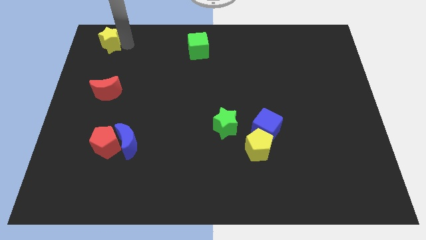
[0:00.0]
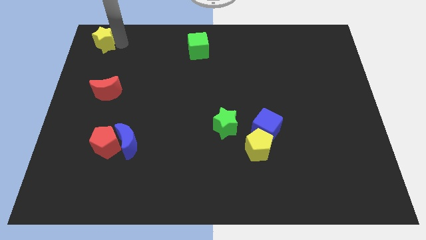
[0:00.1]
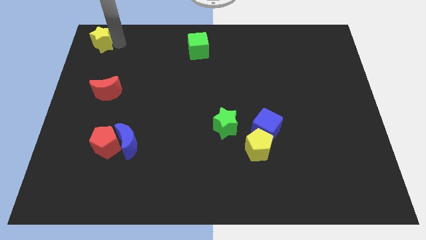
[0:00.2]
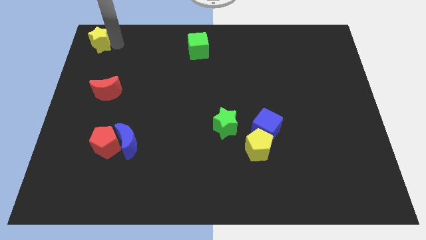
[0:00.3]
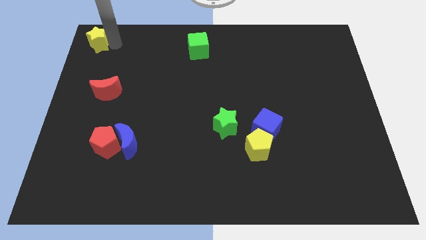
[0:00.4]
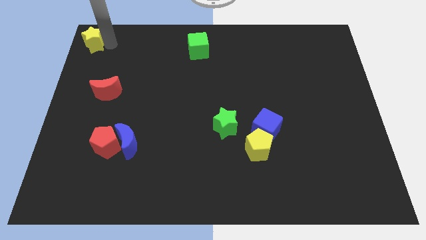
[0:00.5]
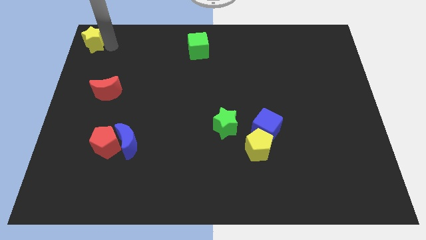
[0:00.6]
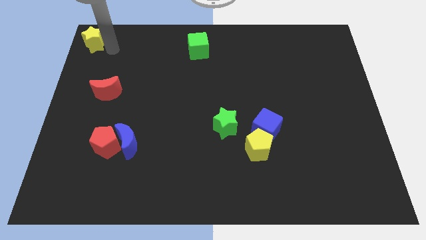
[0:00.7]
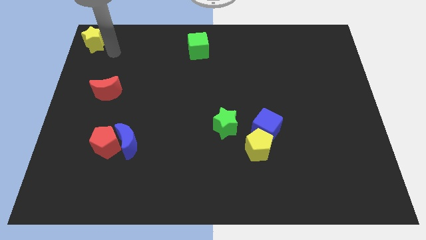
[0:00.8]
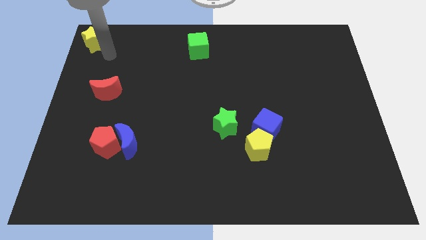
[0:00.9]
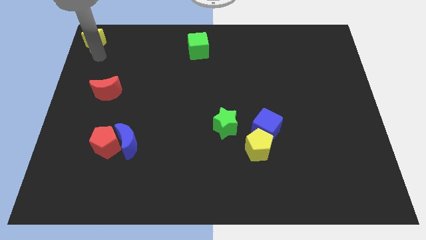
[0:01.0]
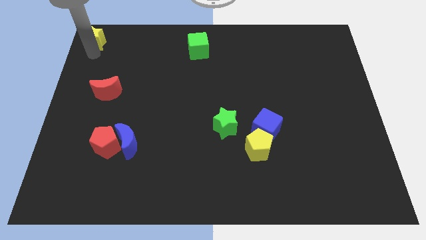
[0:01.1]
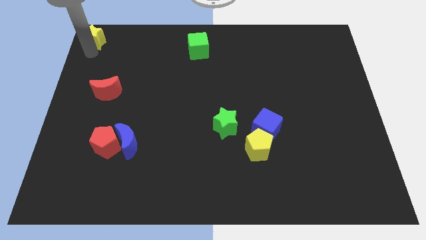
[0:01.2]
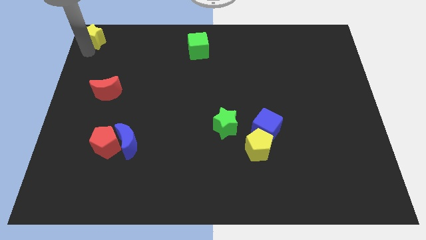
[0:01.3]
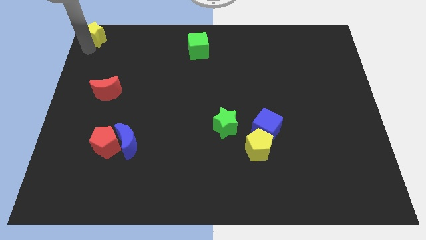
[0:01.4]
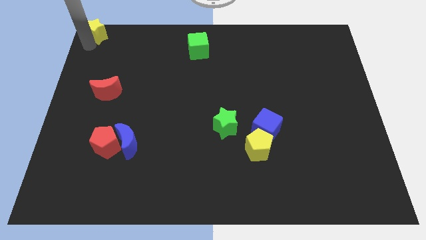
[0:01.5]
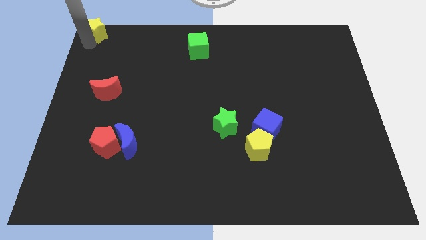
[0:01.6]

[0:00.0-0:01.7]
push the yellow star to the top left corner of the board

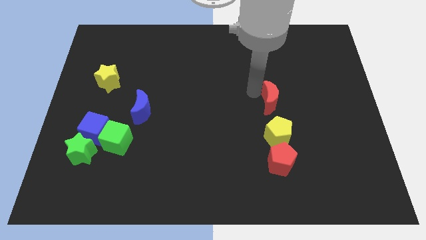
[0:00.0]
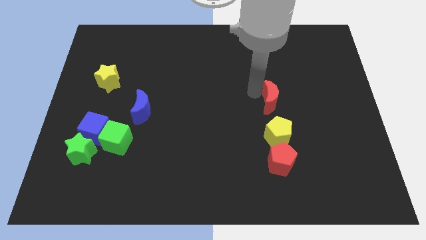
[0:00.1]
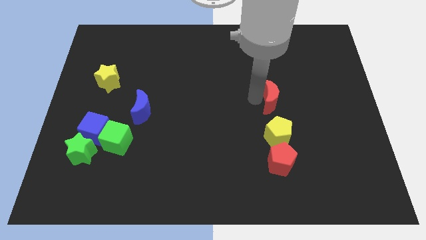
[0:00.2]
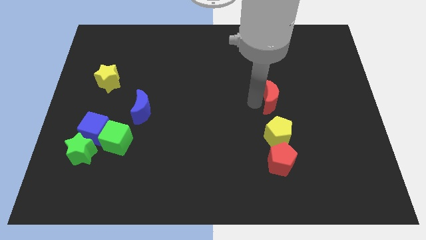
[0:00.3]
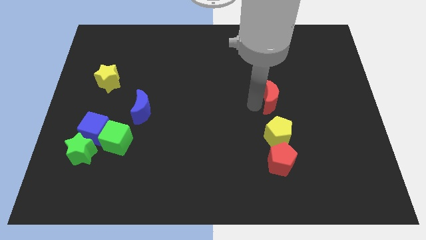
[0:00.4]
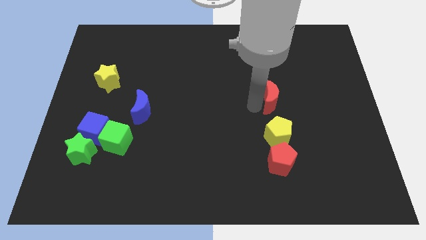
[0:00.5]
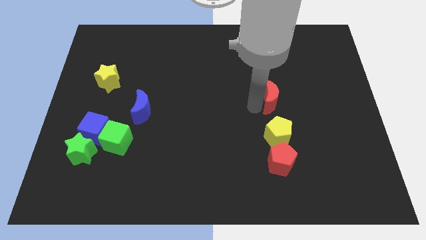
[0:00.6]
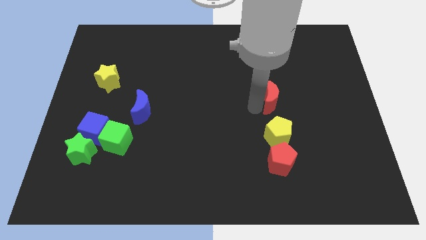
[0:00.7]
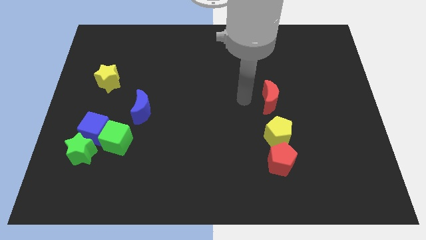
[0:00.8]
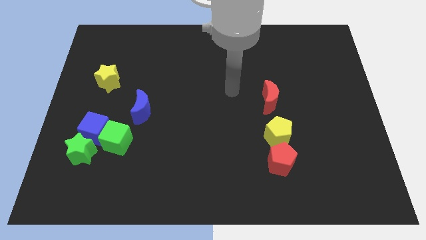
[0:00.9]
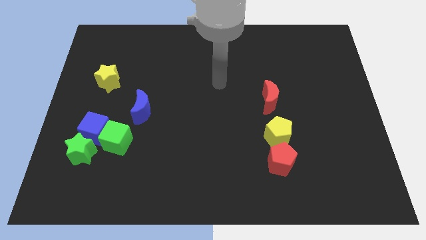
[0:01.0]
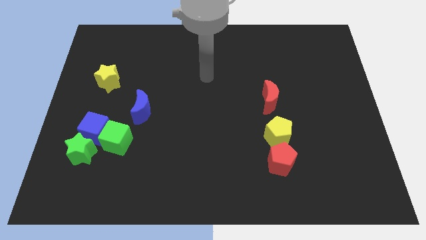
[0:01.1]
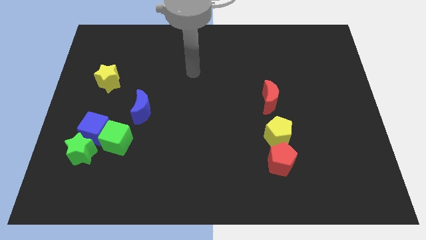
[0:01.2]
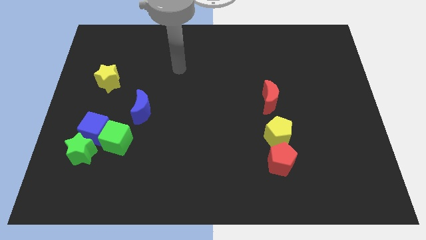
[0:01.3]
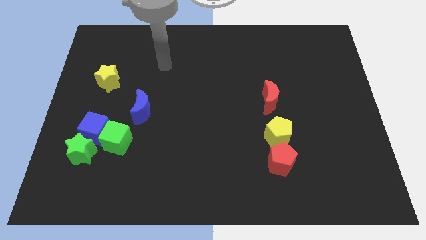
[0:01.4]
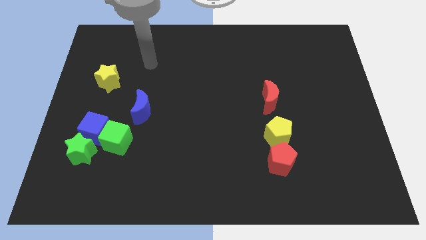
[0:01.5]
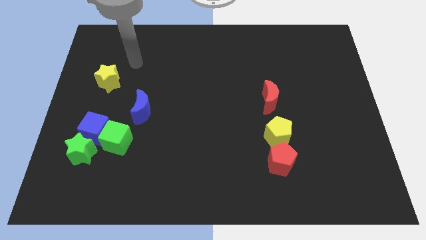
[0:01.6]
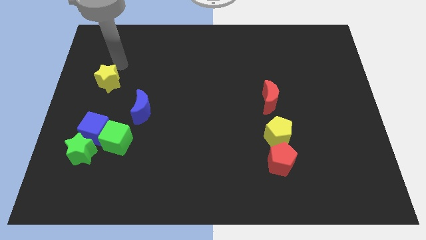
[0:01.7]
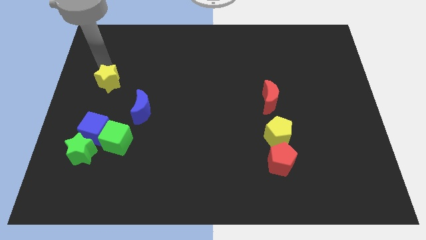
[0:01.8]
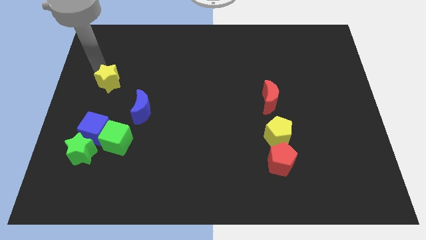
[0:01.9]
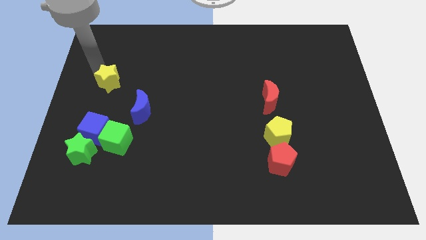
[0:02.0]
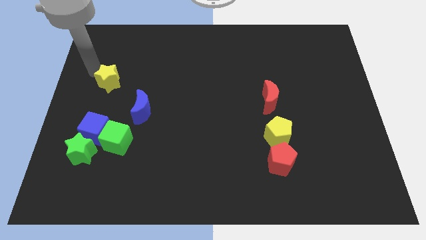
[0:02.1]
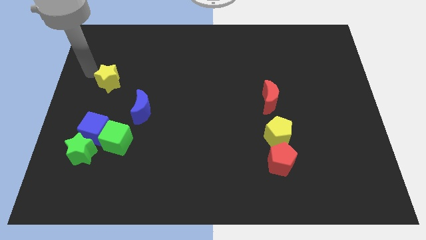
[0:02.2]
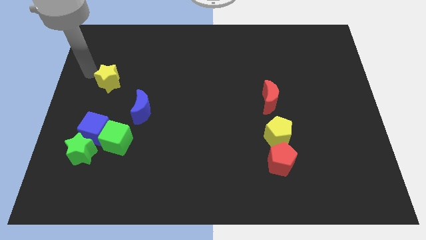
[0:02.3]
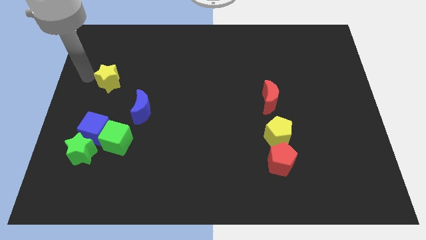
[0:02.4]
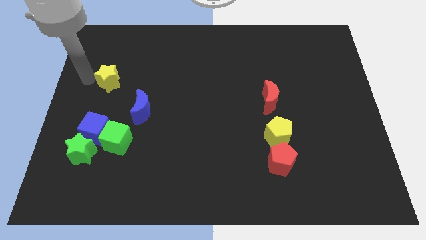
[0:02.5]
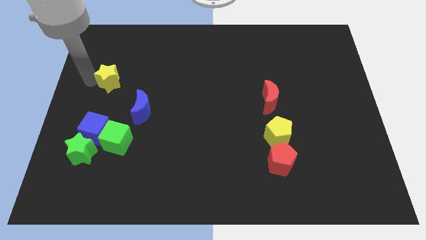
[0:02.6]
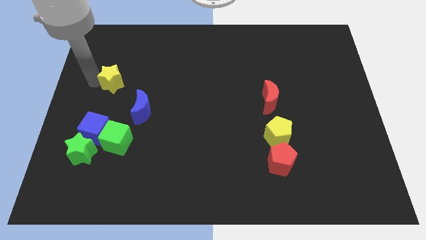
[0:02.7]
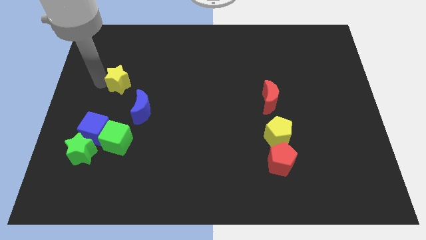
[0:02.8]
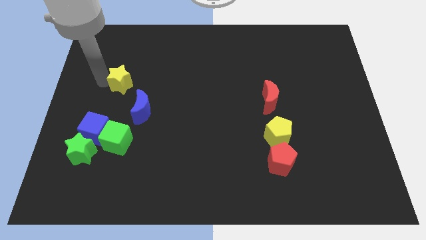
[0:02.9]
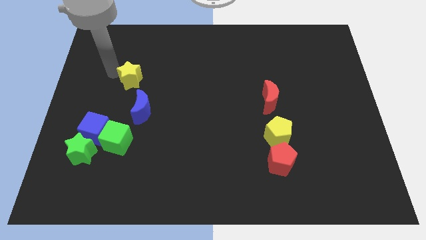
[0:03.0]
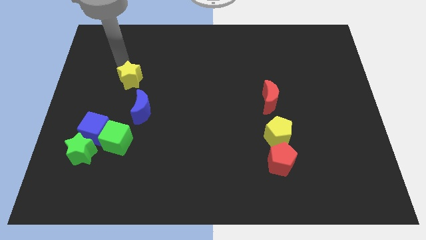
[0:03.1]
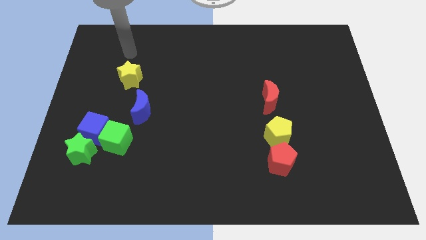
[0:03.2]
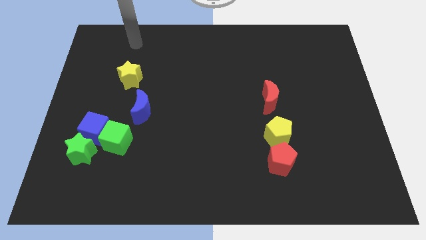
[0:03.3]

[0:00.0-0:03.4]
place the yellow star to the top left side of the blue moon

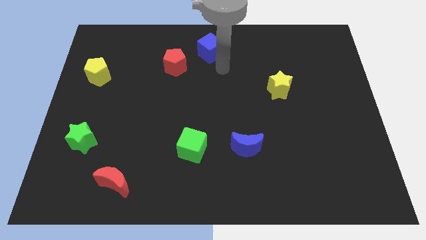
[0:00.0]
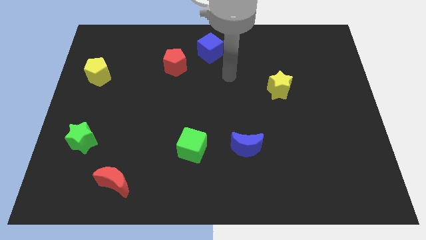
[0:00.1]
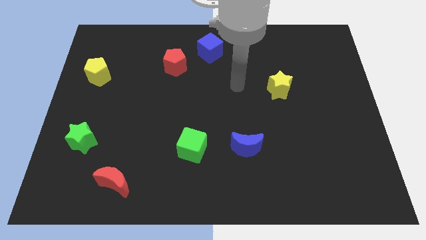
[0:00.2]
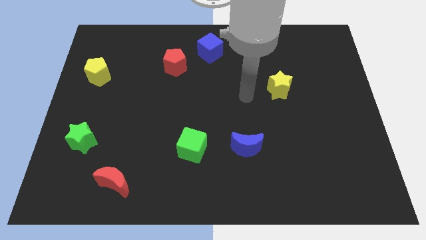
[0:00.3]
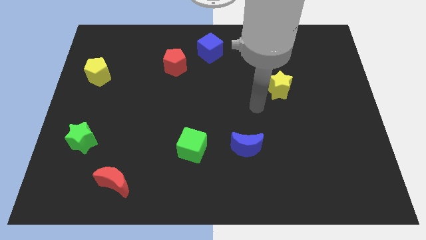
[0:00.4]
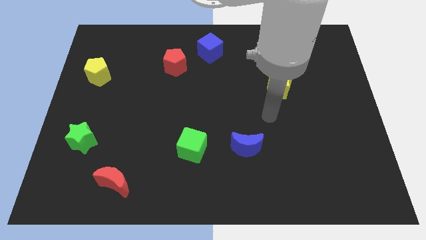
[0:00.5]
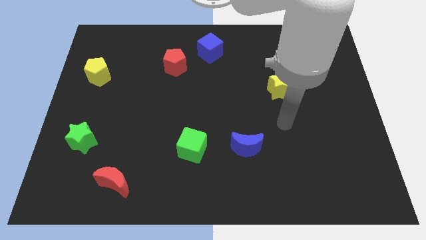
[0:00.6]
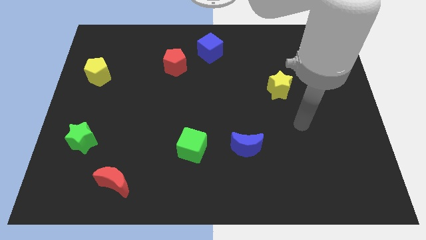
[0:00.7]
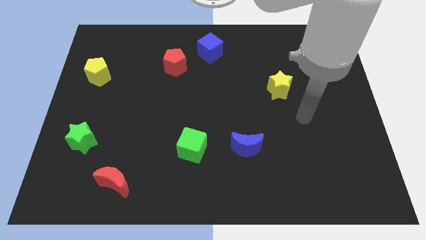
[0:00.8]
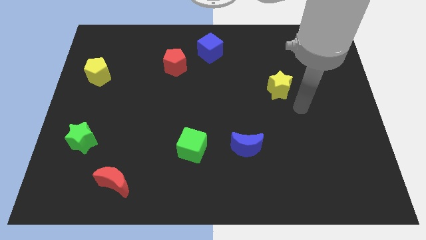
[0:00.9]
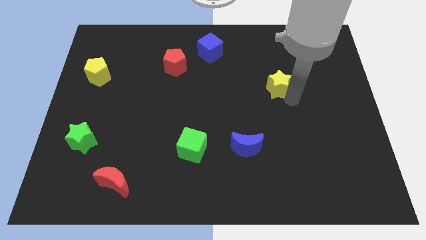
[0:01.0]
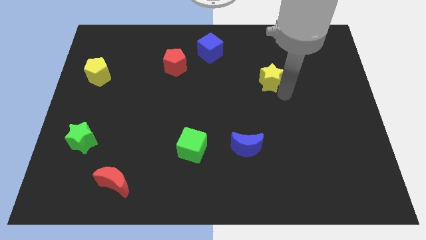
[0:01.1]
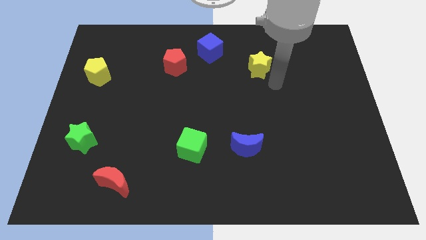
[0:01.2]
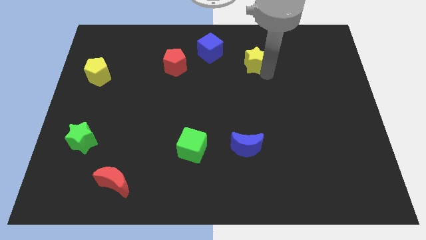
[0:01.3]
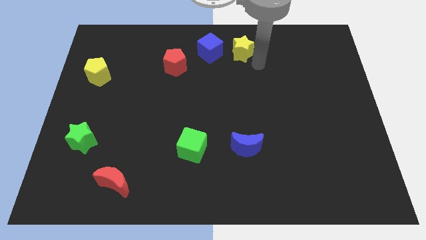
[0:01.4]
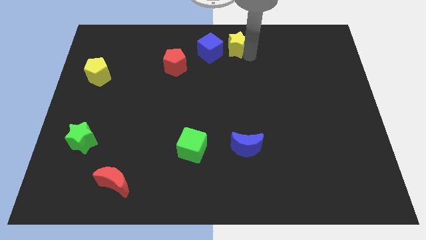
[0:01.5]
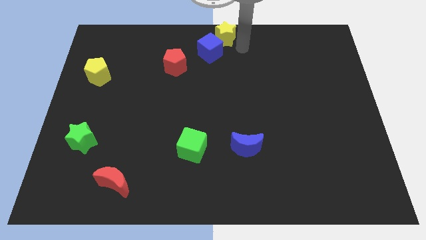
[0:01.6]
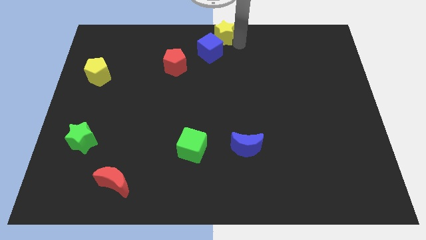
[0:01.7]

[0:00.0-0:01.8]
place the yellow star diagonally on the top of the blue cube

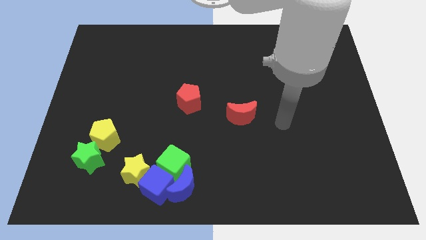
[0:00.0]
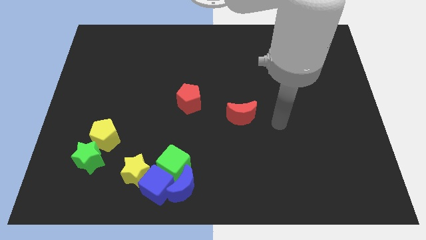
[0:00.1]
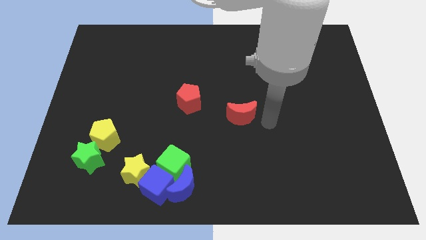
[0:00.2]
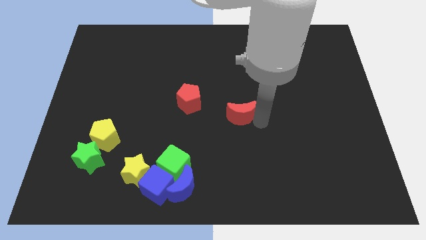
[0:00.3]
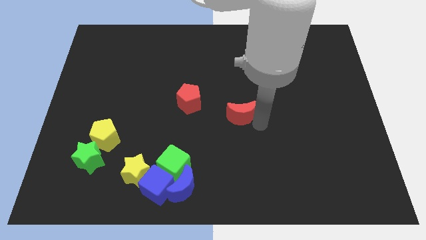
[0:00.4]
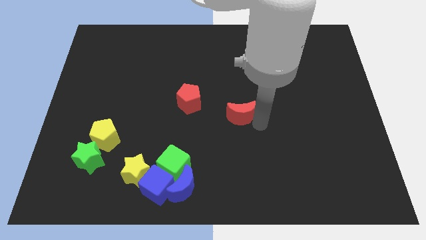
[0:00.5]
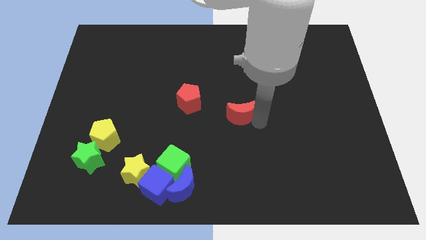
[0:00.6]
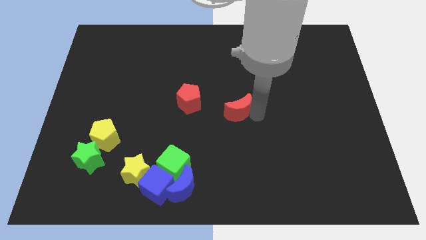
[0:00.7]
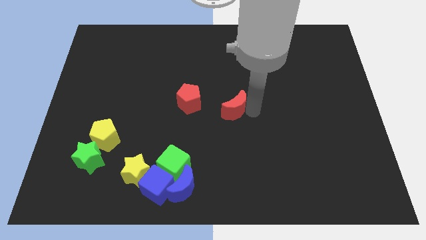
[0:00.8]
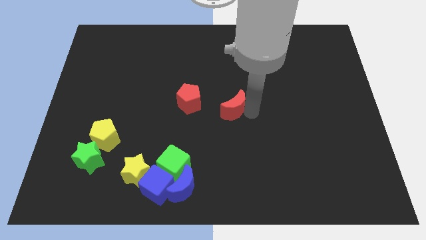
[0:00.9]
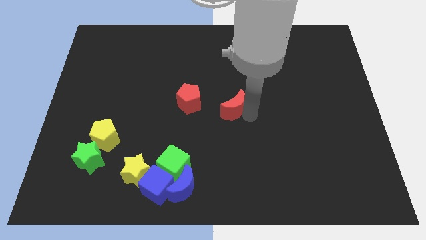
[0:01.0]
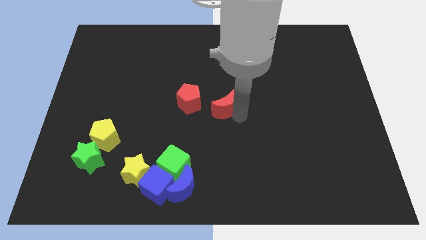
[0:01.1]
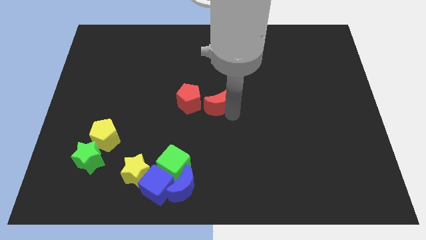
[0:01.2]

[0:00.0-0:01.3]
push the red crescent to the center of the board

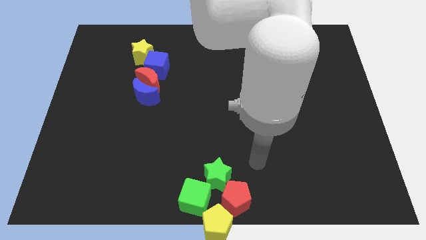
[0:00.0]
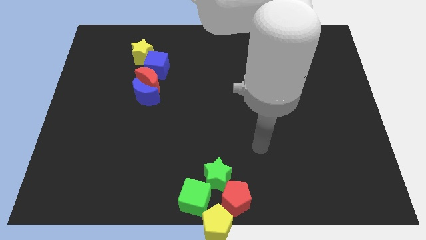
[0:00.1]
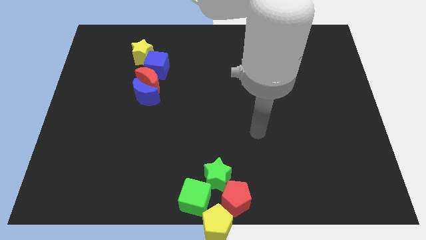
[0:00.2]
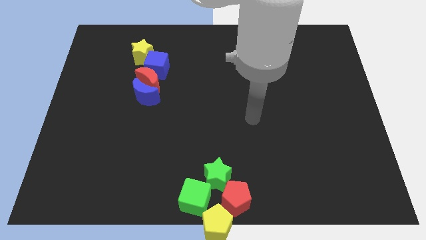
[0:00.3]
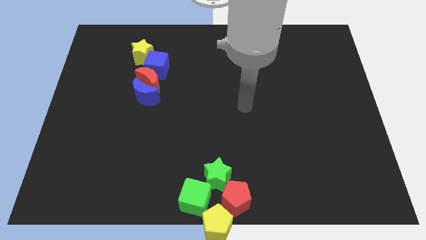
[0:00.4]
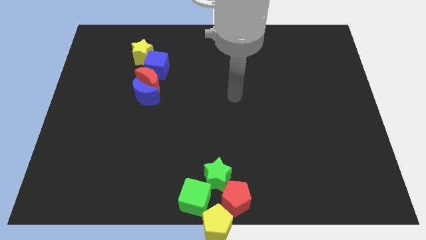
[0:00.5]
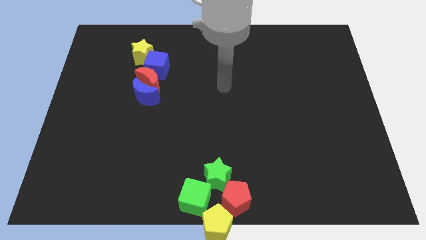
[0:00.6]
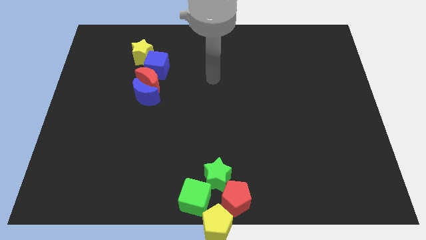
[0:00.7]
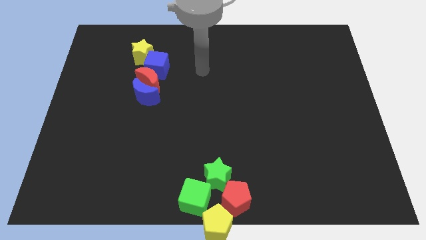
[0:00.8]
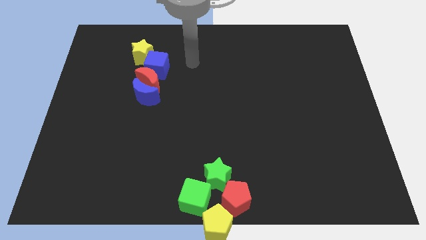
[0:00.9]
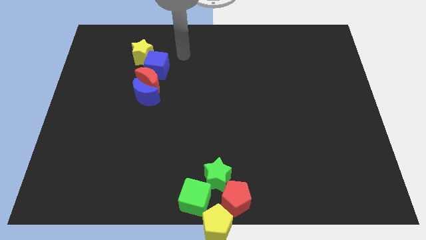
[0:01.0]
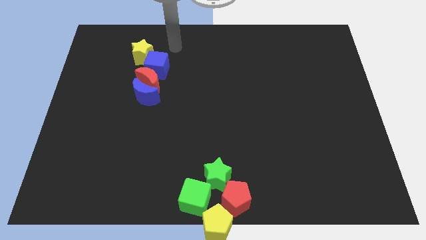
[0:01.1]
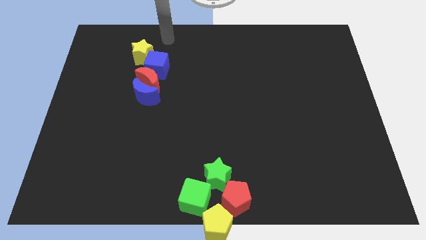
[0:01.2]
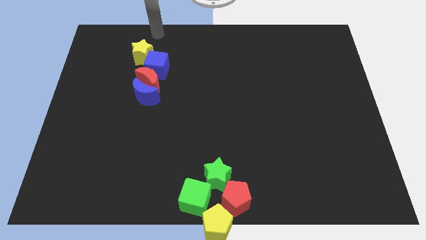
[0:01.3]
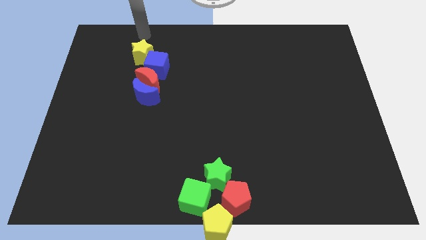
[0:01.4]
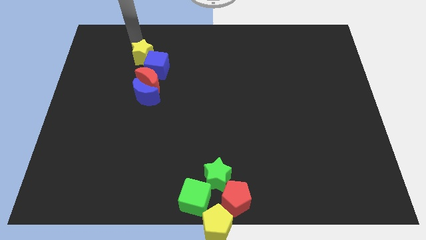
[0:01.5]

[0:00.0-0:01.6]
move your arm to the top of the yellow star
